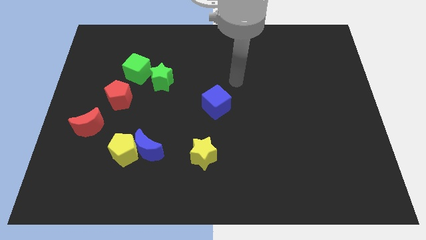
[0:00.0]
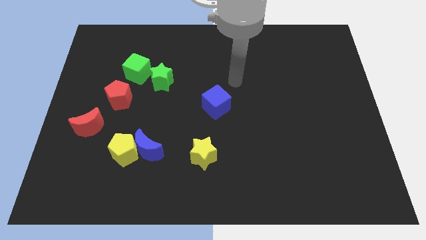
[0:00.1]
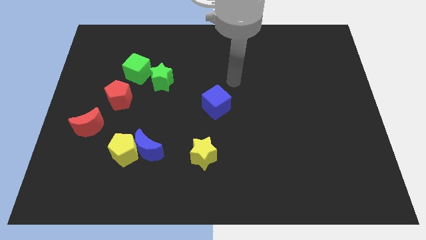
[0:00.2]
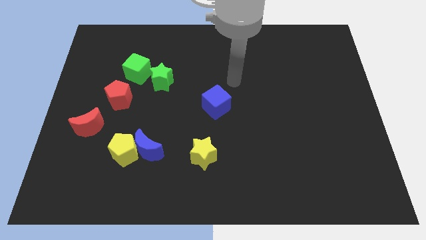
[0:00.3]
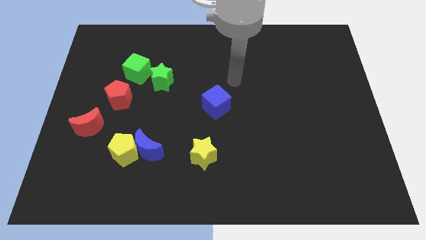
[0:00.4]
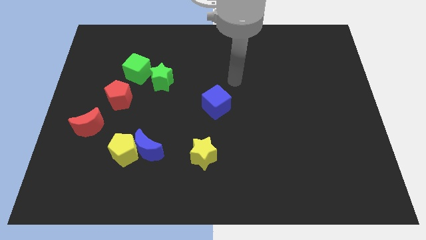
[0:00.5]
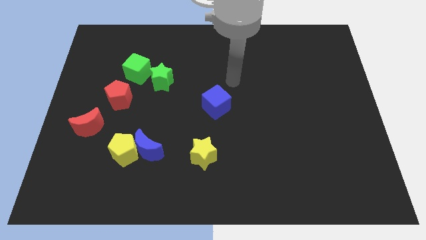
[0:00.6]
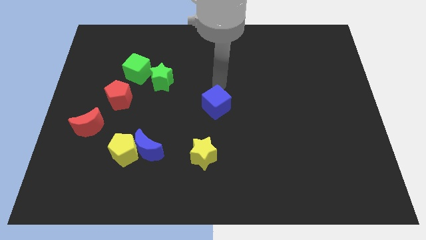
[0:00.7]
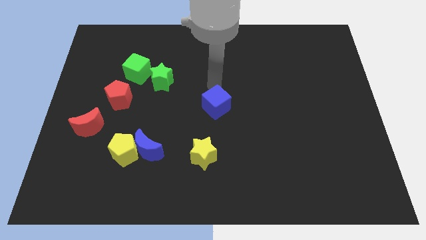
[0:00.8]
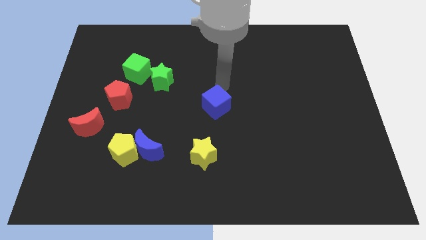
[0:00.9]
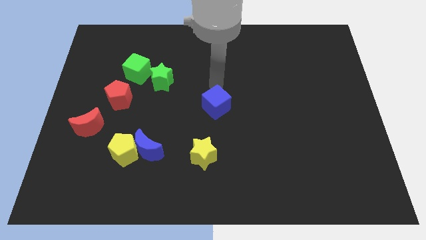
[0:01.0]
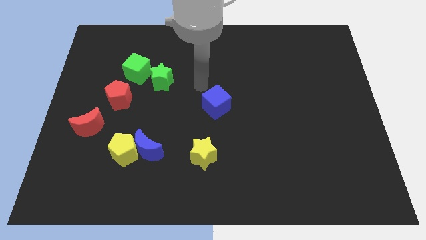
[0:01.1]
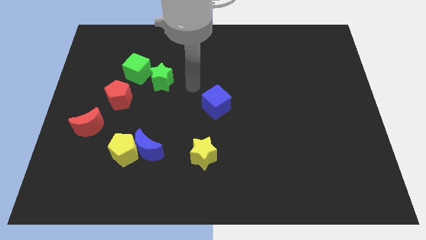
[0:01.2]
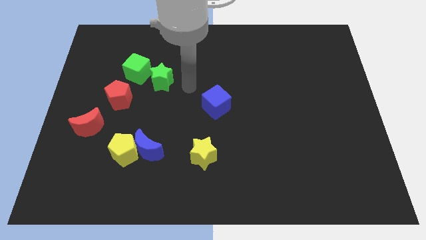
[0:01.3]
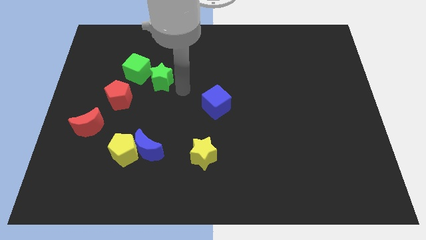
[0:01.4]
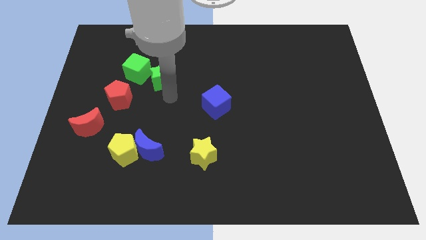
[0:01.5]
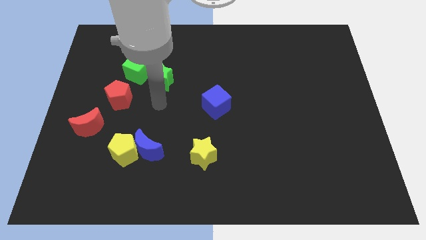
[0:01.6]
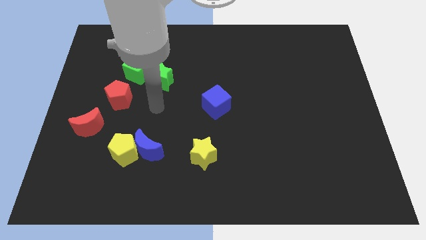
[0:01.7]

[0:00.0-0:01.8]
move your arm close to the green star

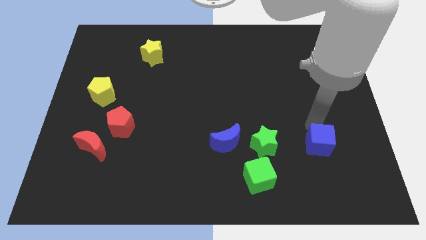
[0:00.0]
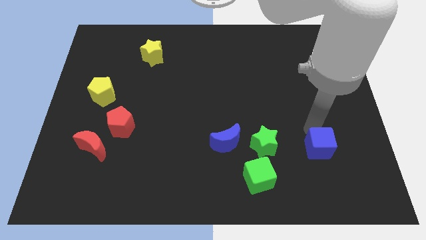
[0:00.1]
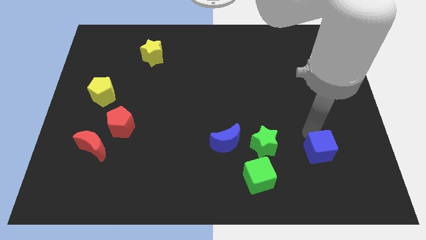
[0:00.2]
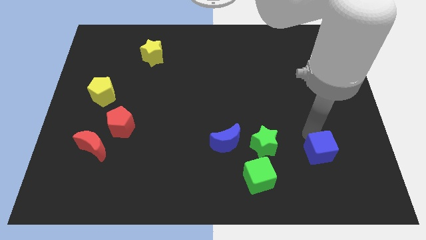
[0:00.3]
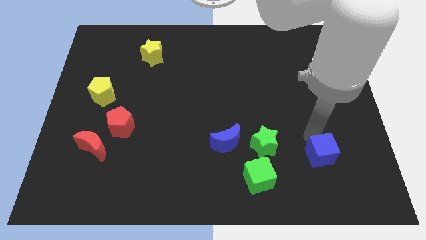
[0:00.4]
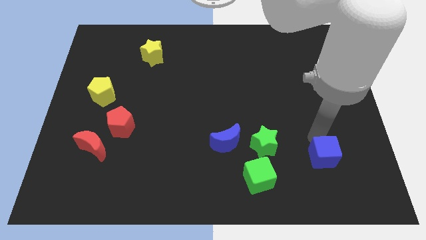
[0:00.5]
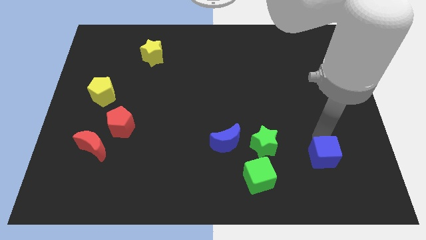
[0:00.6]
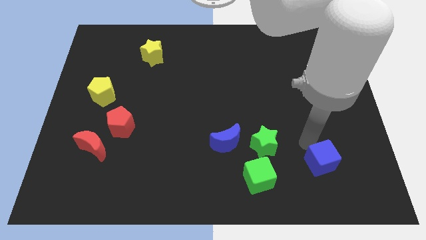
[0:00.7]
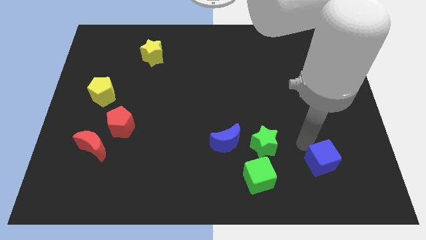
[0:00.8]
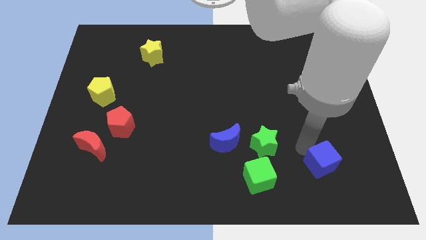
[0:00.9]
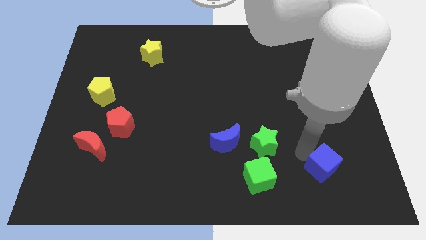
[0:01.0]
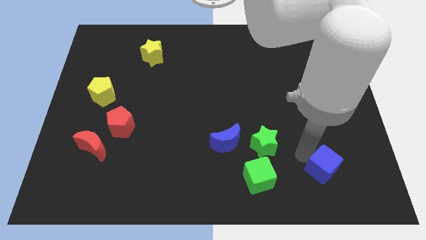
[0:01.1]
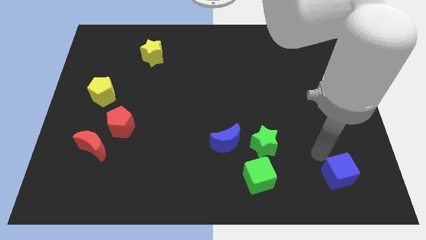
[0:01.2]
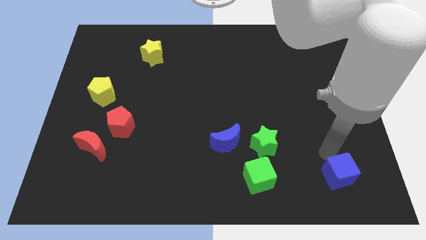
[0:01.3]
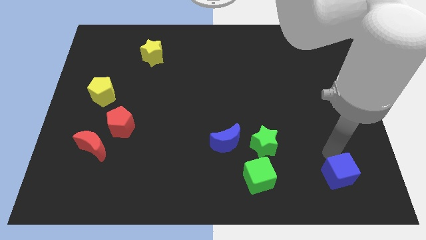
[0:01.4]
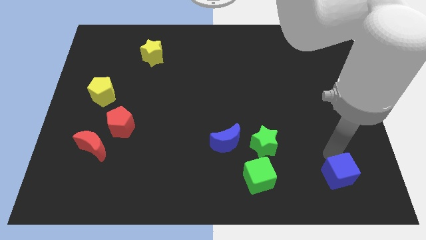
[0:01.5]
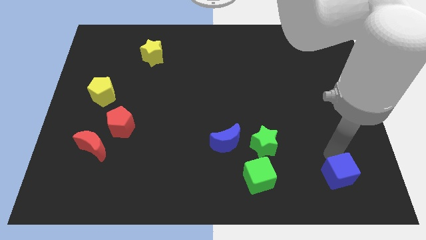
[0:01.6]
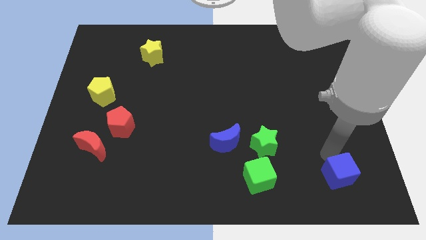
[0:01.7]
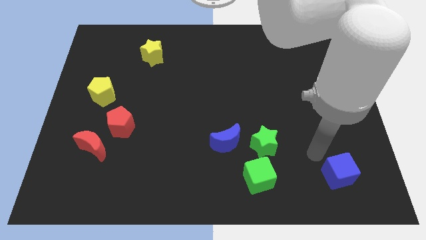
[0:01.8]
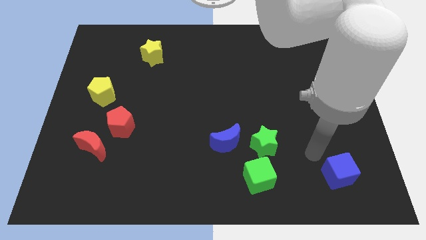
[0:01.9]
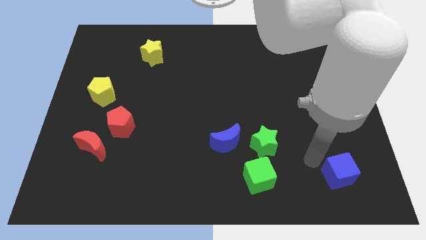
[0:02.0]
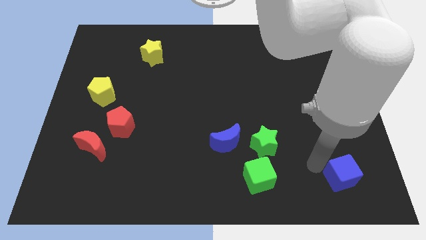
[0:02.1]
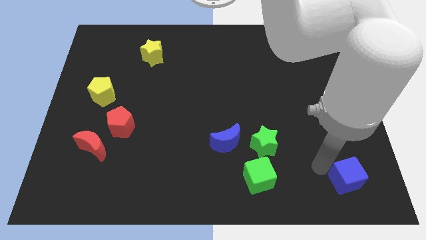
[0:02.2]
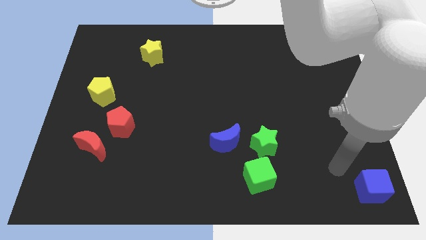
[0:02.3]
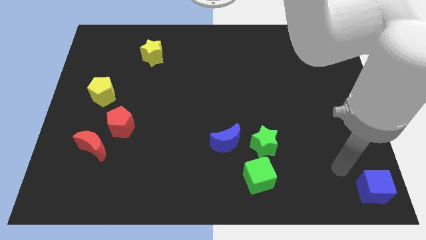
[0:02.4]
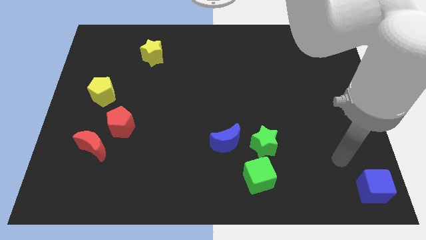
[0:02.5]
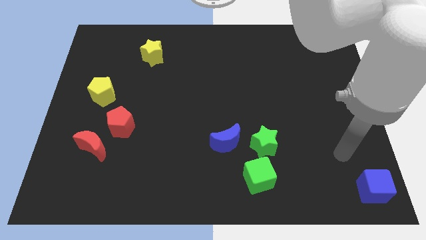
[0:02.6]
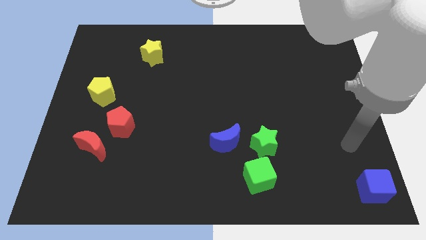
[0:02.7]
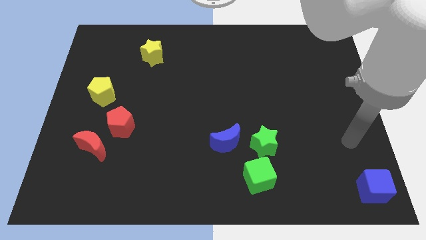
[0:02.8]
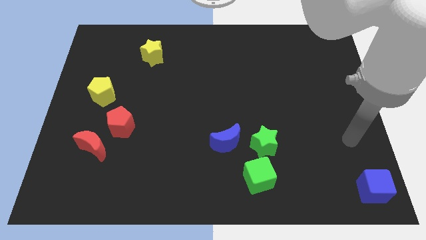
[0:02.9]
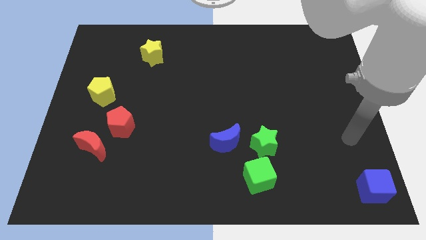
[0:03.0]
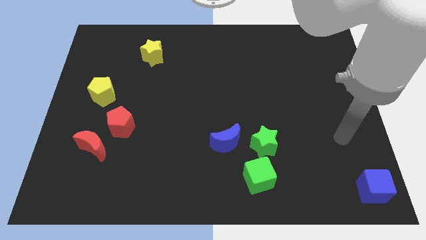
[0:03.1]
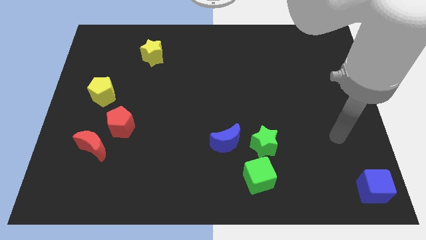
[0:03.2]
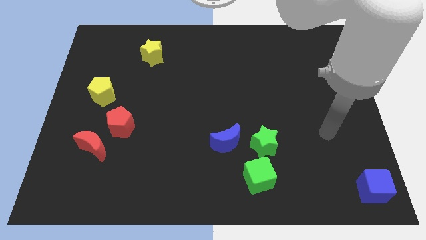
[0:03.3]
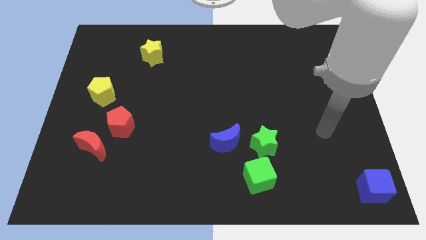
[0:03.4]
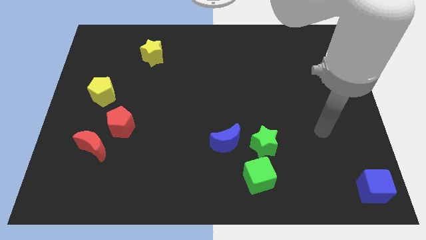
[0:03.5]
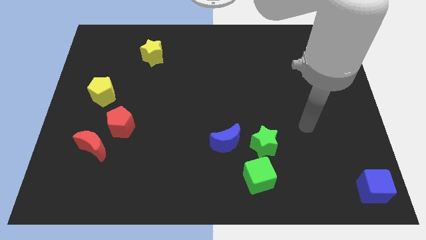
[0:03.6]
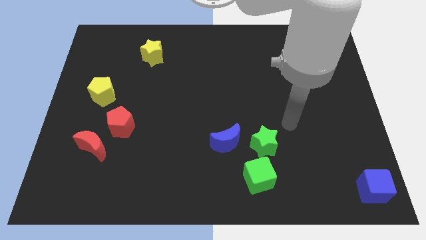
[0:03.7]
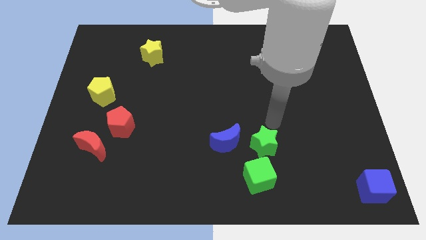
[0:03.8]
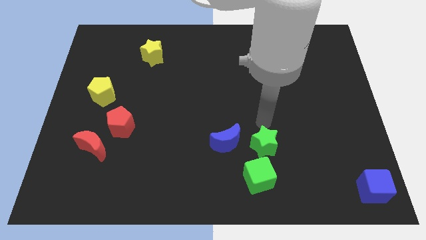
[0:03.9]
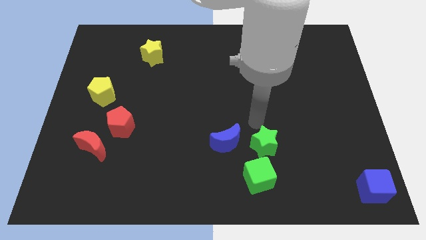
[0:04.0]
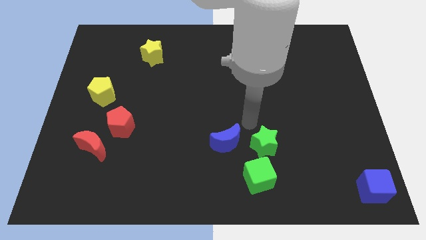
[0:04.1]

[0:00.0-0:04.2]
move blue cube to the bottom right corner of the board

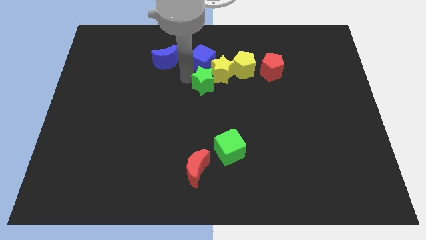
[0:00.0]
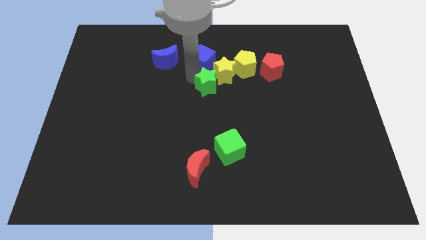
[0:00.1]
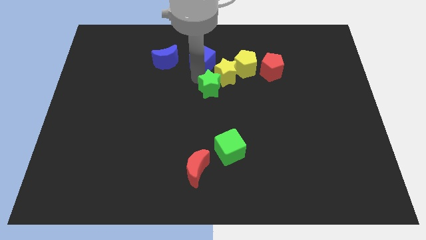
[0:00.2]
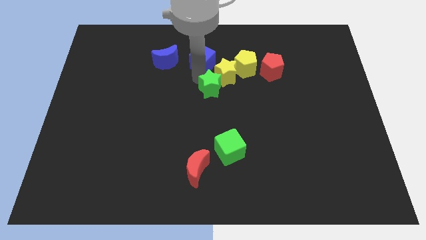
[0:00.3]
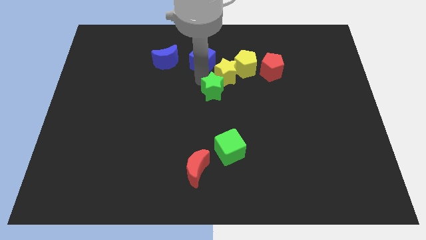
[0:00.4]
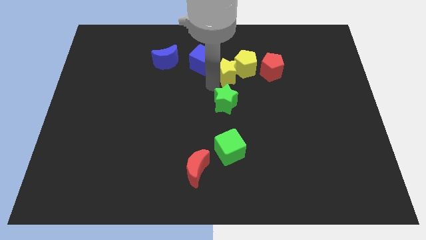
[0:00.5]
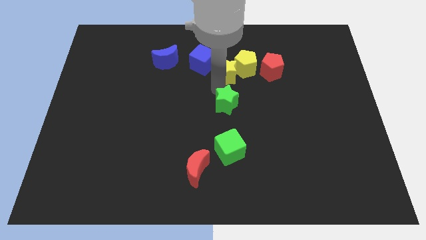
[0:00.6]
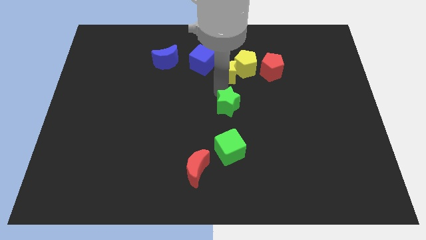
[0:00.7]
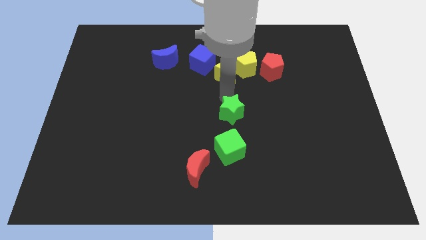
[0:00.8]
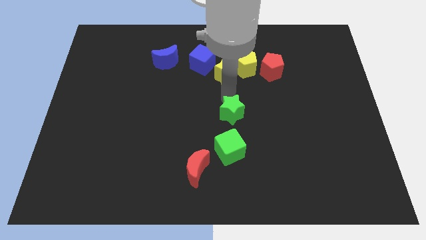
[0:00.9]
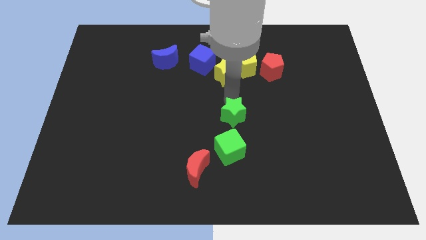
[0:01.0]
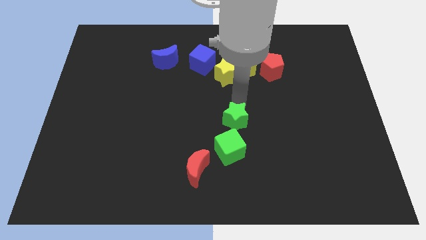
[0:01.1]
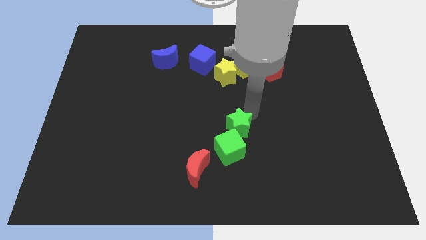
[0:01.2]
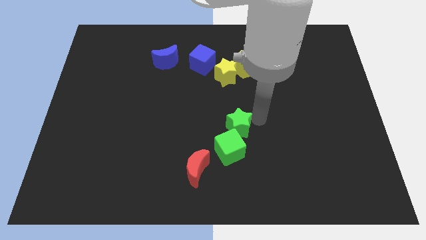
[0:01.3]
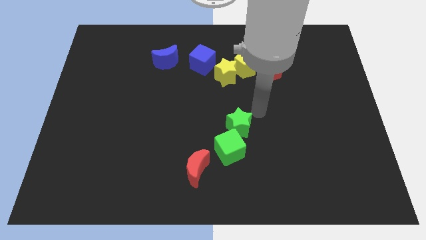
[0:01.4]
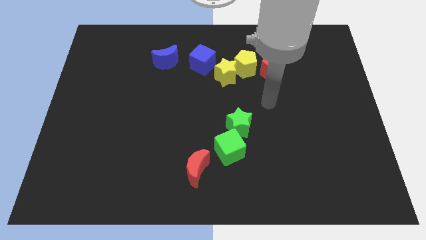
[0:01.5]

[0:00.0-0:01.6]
move the green star close to the green cube

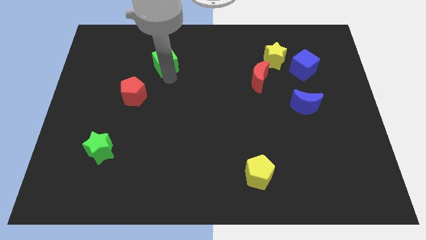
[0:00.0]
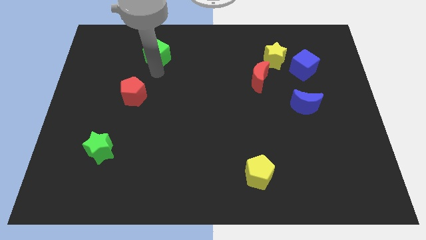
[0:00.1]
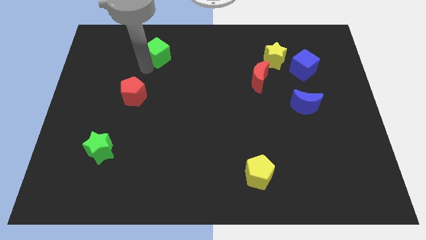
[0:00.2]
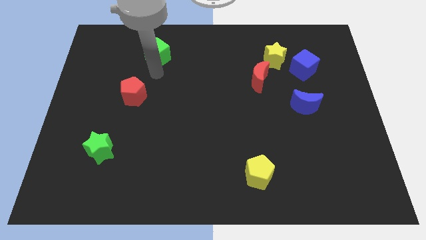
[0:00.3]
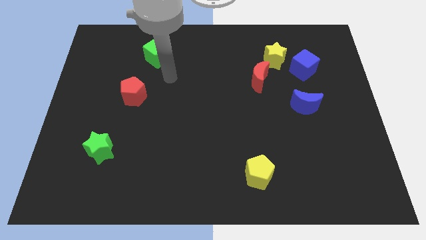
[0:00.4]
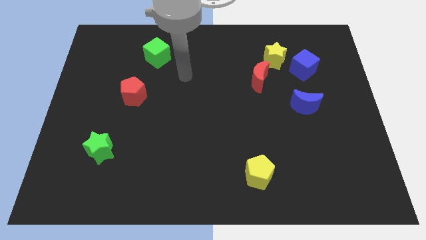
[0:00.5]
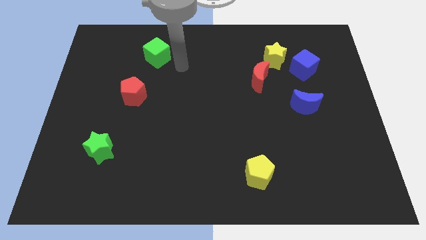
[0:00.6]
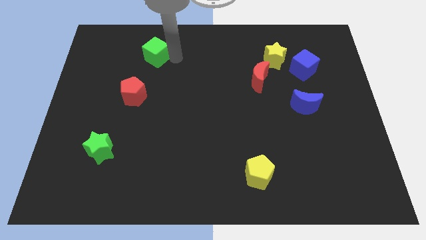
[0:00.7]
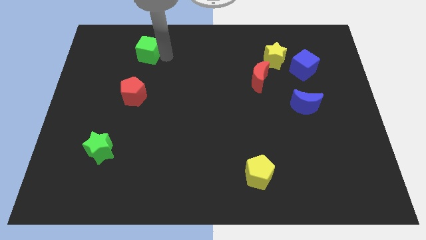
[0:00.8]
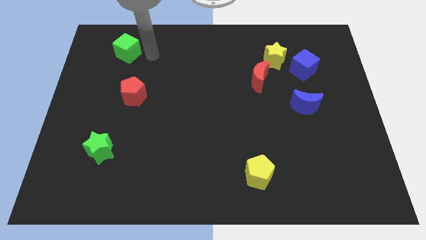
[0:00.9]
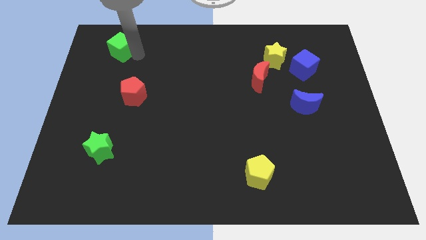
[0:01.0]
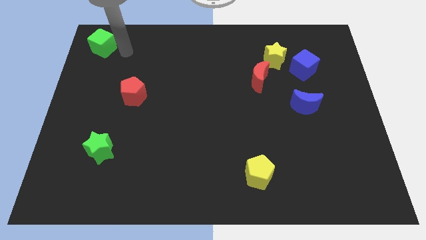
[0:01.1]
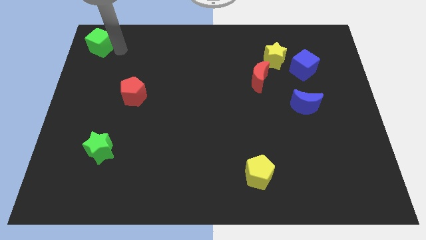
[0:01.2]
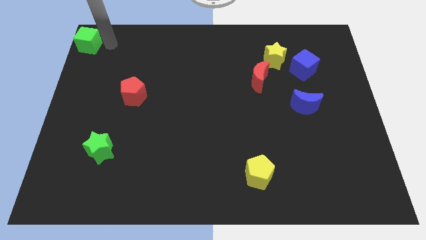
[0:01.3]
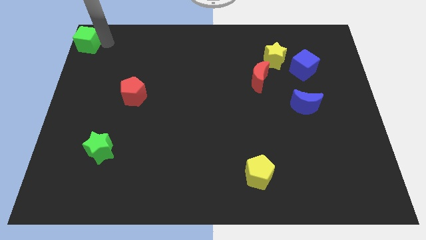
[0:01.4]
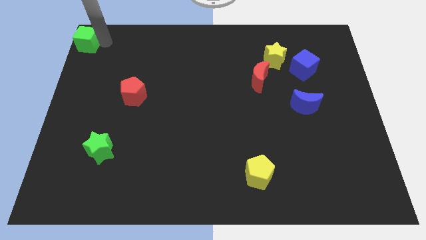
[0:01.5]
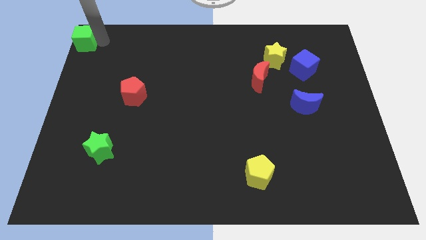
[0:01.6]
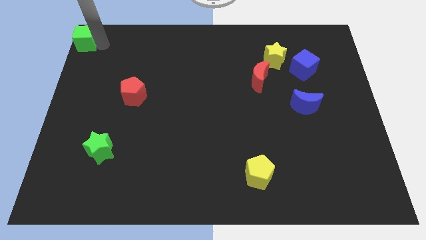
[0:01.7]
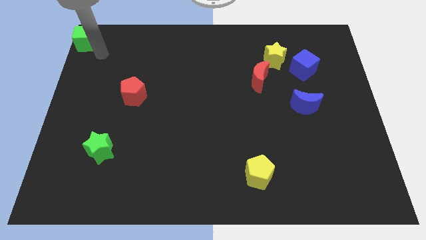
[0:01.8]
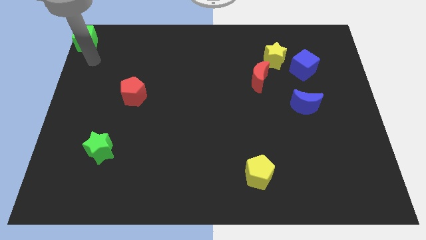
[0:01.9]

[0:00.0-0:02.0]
push green cube towards left top corner of board
